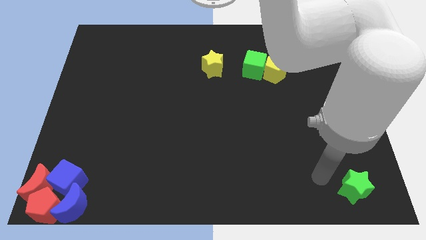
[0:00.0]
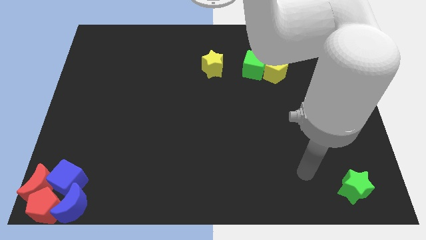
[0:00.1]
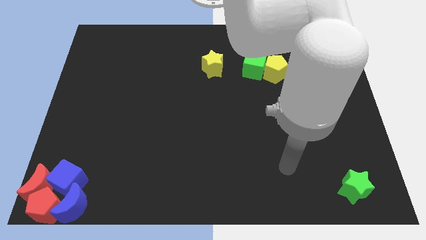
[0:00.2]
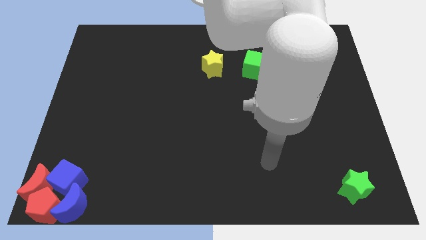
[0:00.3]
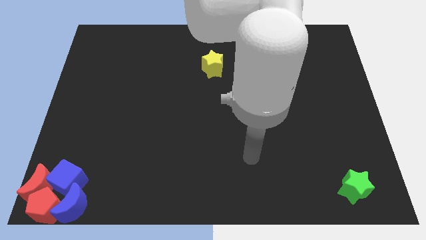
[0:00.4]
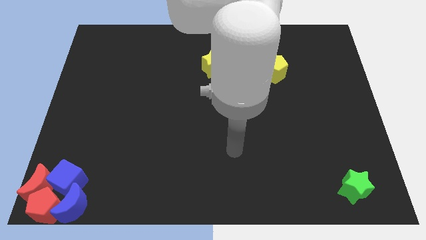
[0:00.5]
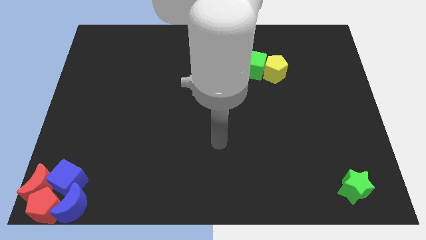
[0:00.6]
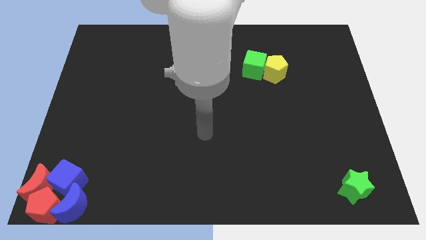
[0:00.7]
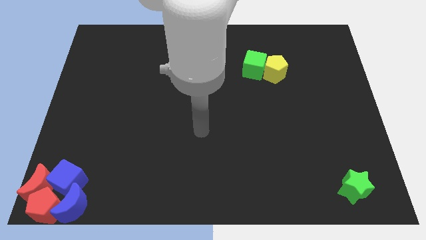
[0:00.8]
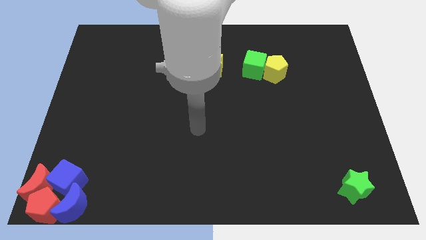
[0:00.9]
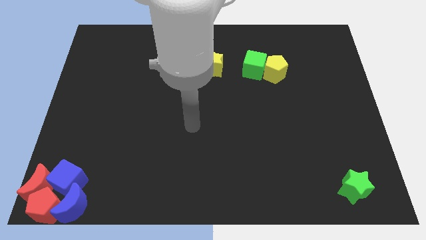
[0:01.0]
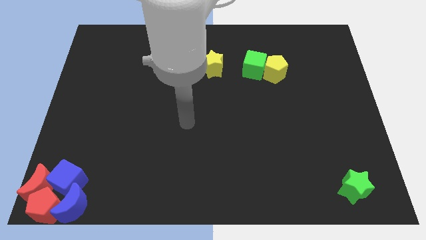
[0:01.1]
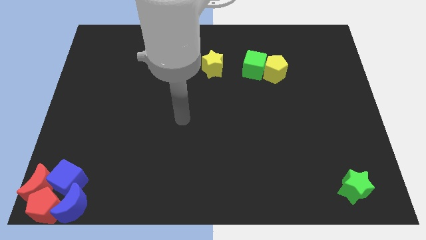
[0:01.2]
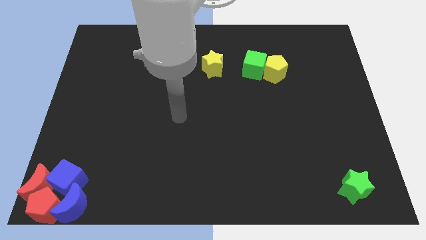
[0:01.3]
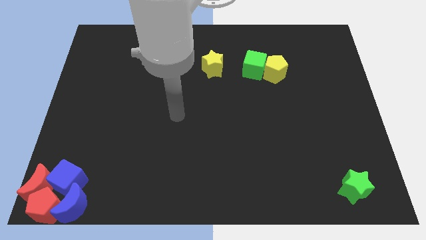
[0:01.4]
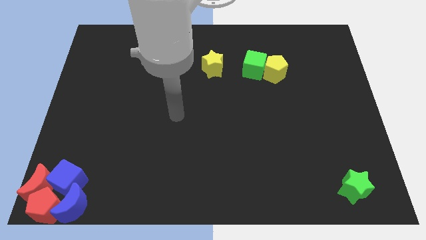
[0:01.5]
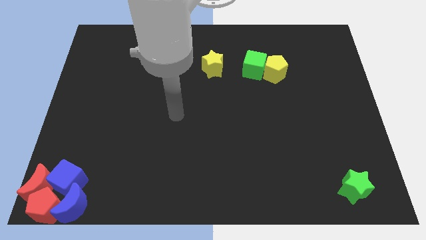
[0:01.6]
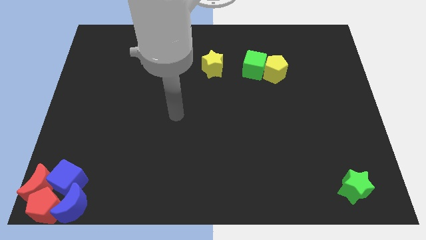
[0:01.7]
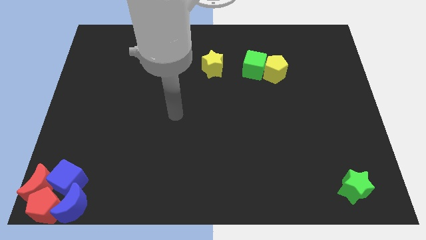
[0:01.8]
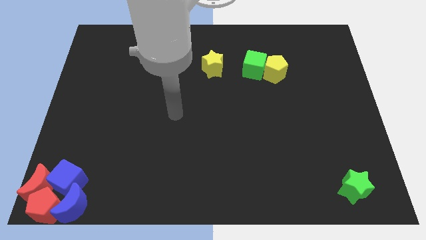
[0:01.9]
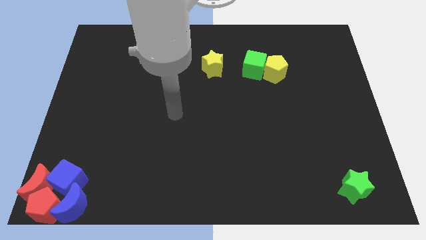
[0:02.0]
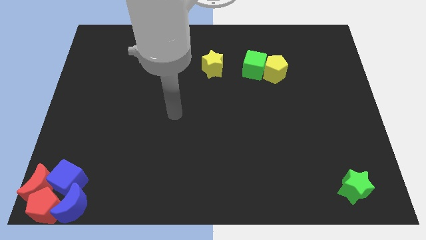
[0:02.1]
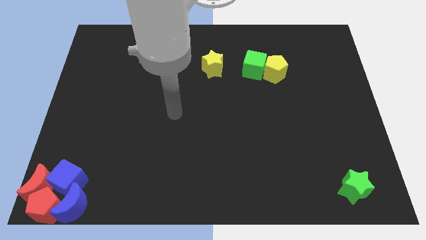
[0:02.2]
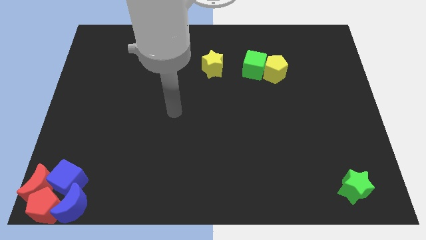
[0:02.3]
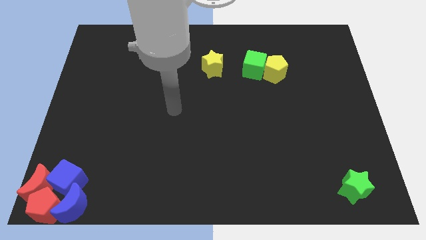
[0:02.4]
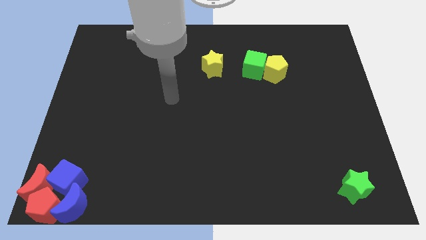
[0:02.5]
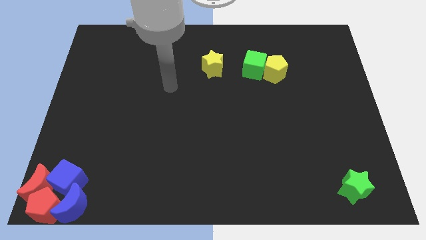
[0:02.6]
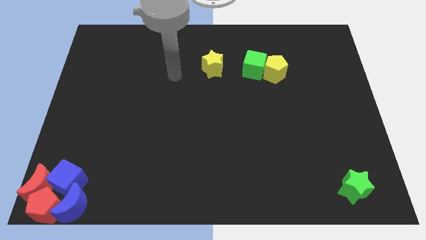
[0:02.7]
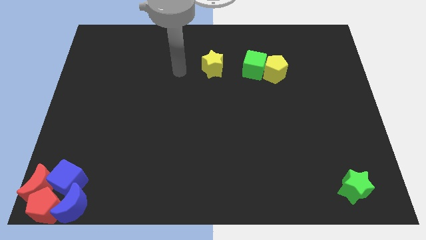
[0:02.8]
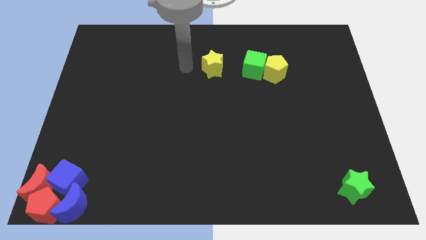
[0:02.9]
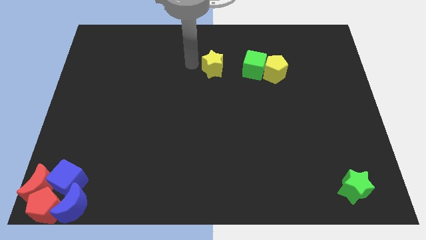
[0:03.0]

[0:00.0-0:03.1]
move your arm and point to the left of green cube

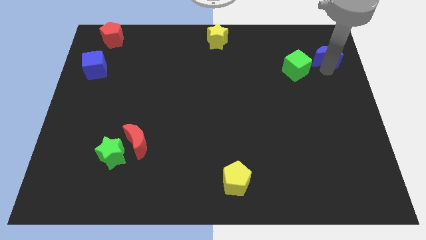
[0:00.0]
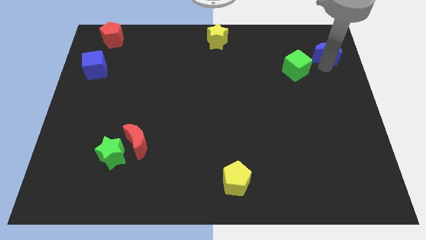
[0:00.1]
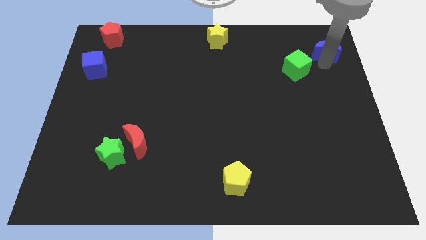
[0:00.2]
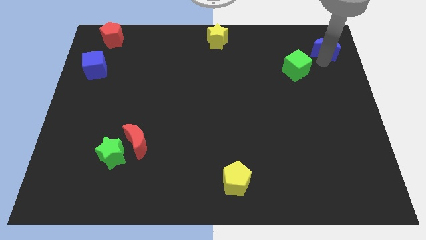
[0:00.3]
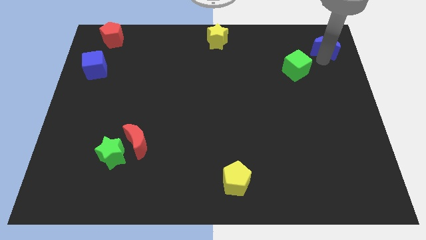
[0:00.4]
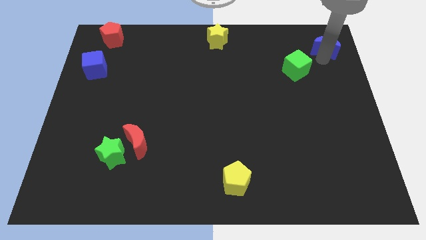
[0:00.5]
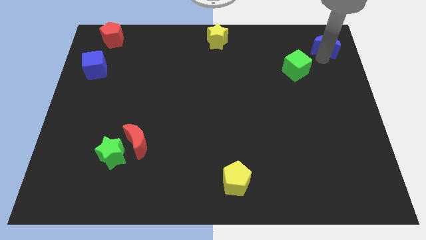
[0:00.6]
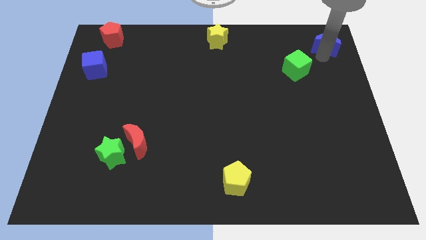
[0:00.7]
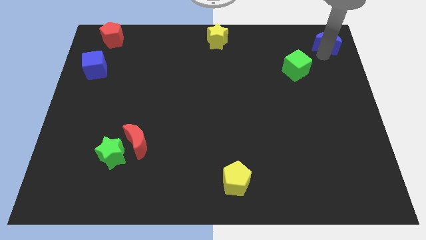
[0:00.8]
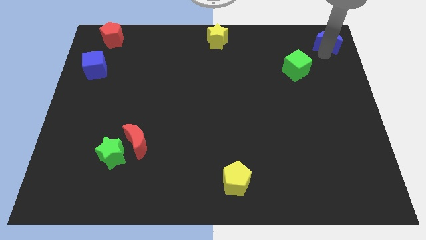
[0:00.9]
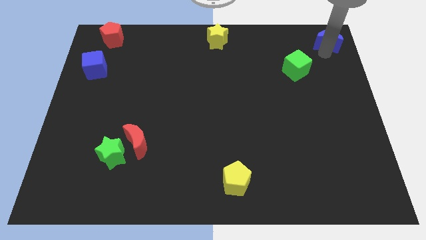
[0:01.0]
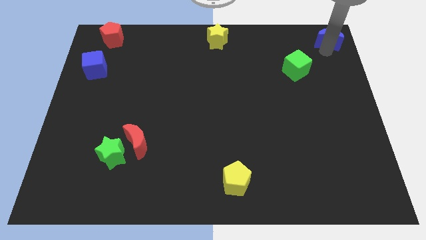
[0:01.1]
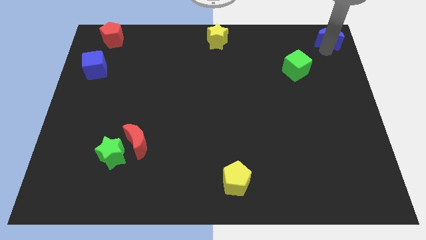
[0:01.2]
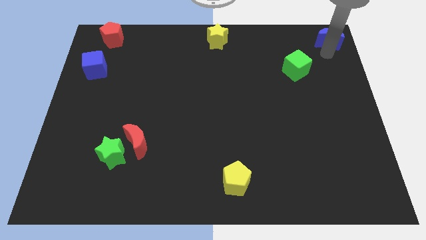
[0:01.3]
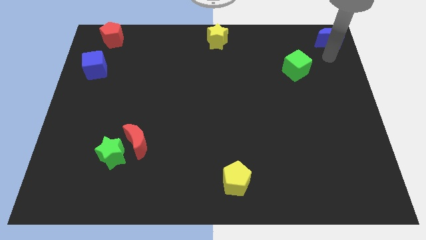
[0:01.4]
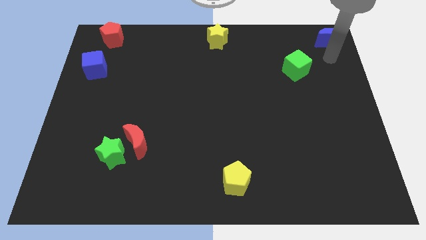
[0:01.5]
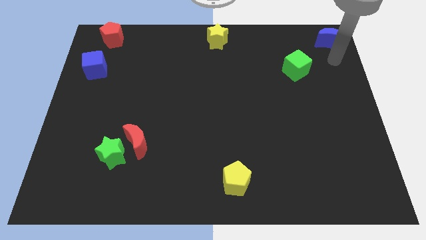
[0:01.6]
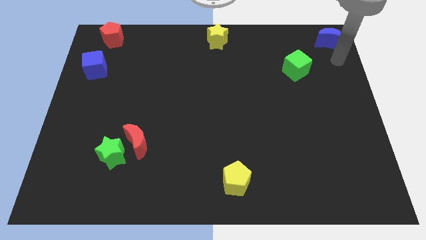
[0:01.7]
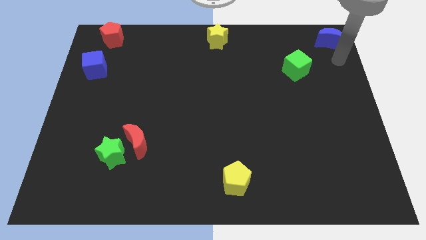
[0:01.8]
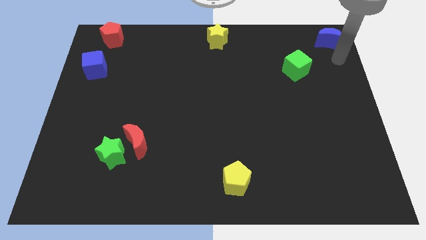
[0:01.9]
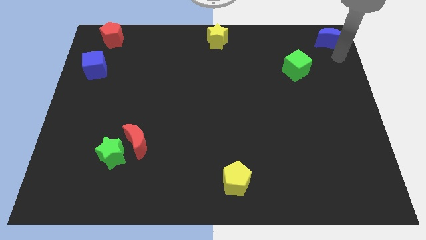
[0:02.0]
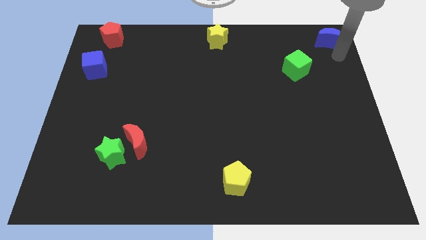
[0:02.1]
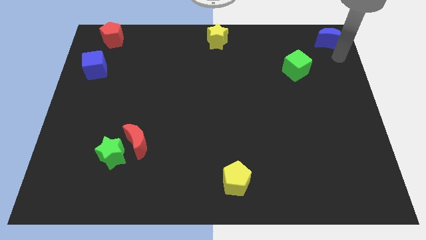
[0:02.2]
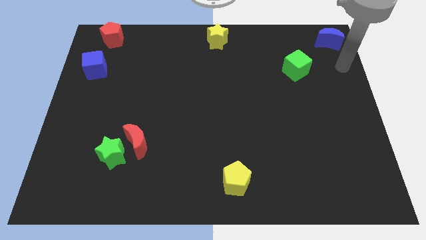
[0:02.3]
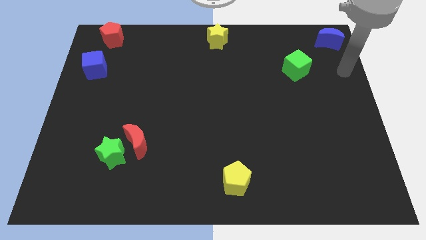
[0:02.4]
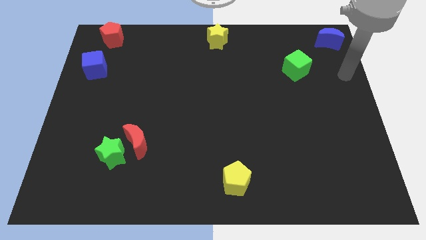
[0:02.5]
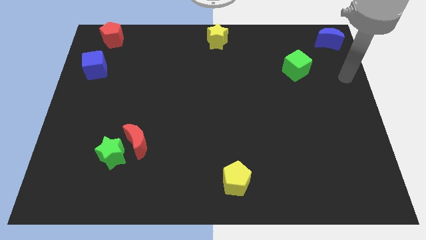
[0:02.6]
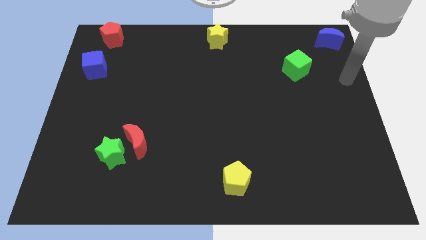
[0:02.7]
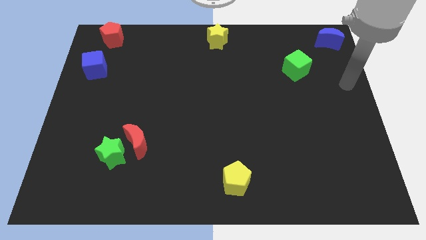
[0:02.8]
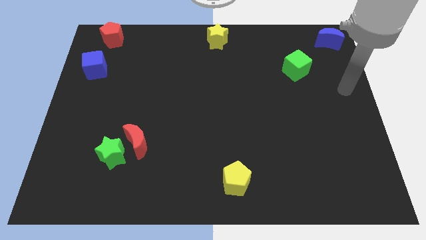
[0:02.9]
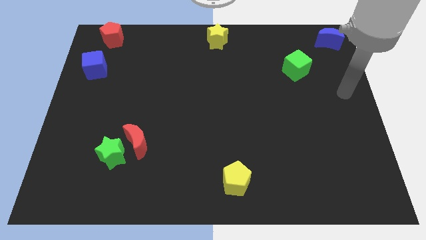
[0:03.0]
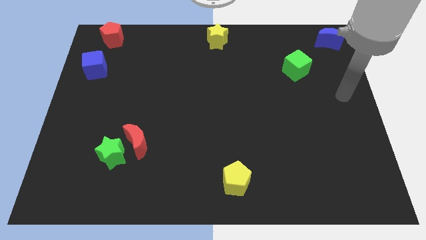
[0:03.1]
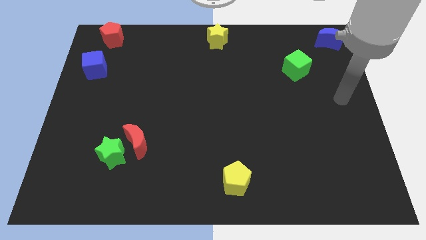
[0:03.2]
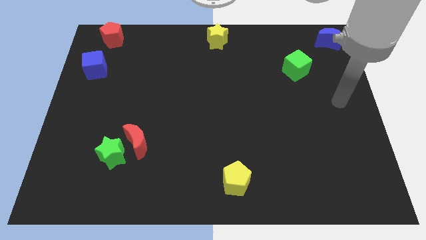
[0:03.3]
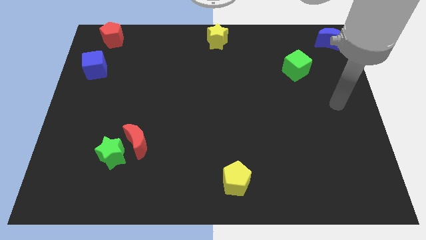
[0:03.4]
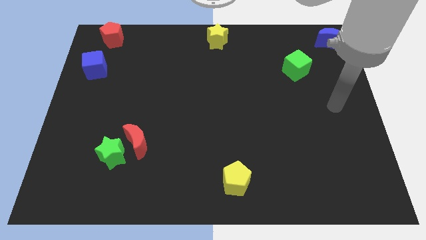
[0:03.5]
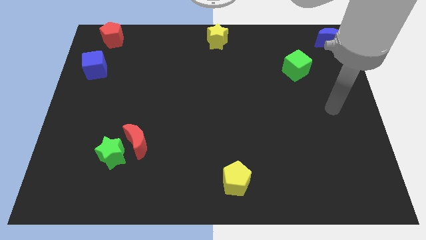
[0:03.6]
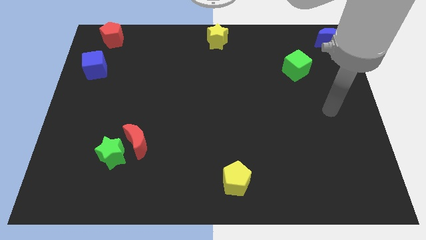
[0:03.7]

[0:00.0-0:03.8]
separate blue cube from green cube

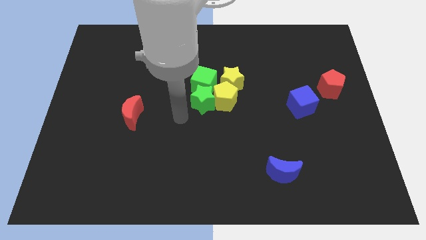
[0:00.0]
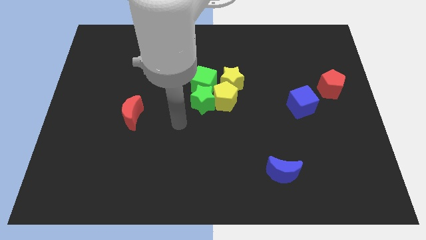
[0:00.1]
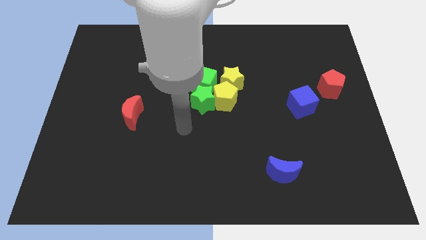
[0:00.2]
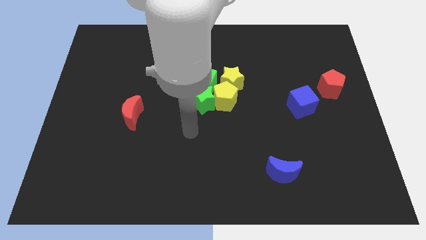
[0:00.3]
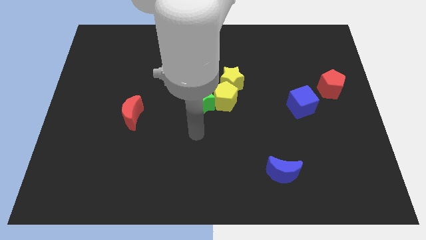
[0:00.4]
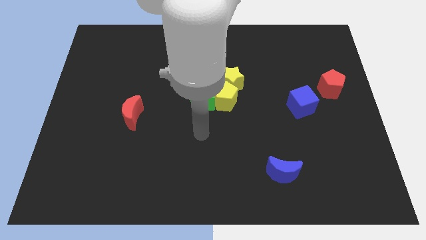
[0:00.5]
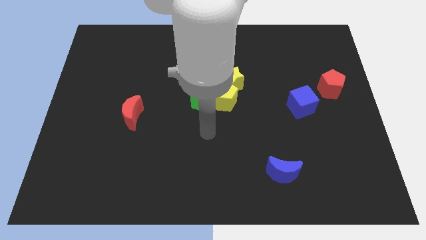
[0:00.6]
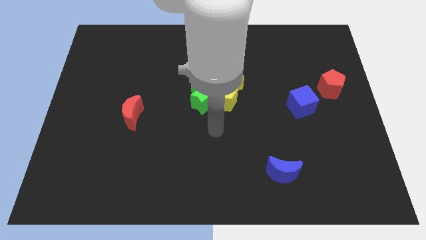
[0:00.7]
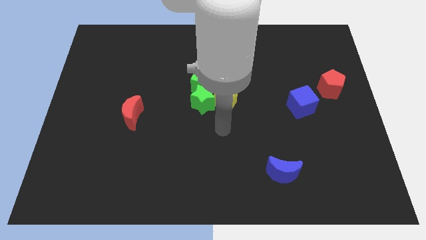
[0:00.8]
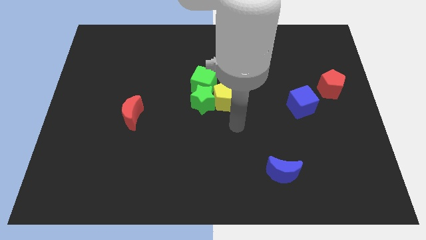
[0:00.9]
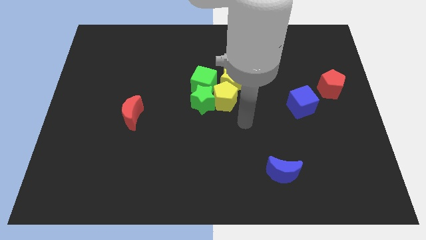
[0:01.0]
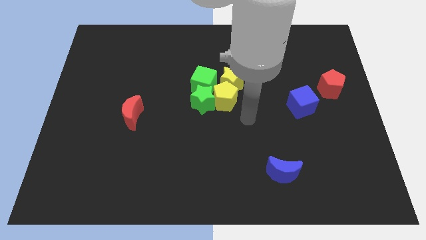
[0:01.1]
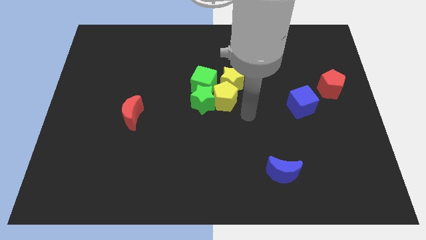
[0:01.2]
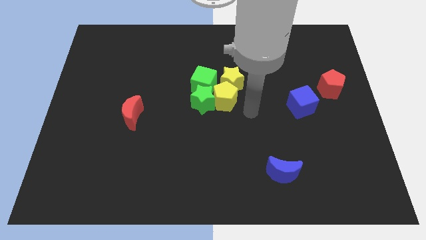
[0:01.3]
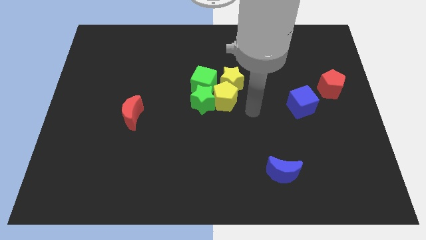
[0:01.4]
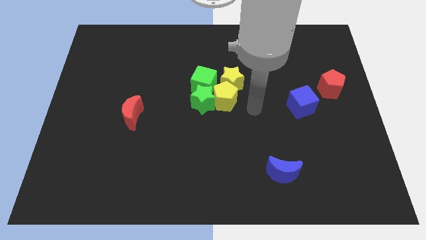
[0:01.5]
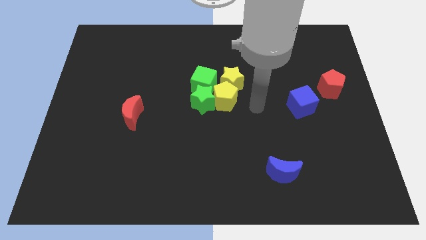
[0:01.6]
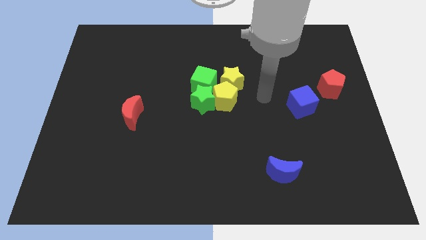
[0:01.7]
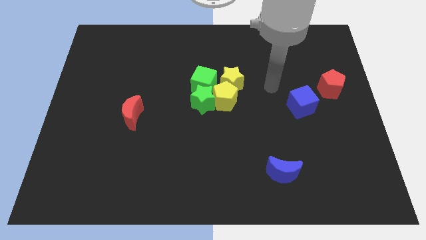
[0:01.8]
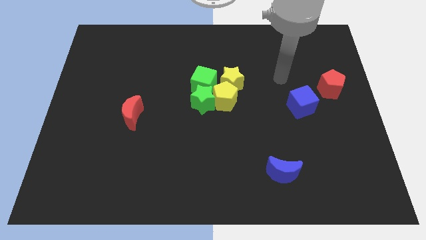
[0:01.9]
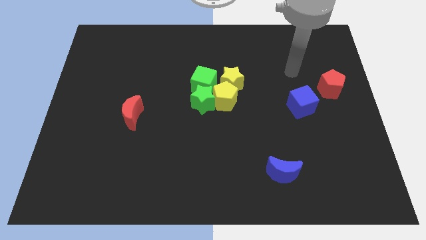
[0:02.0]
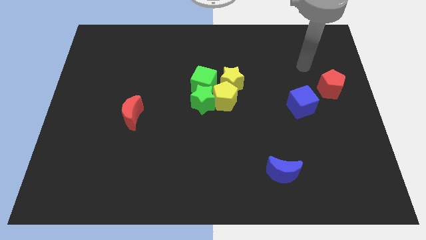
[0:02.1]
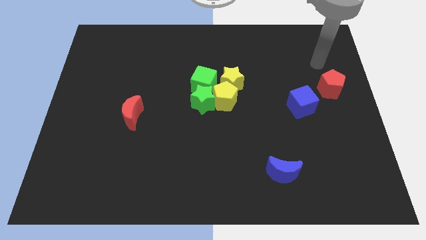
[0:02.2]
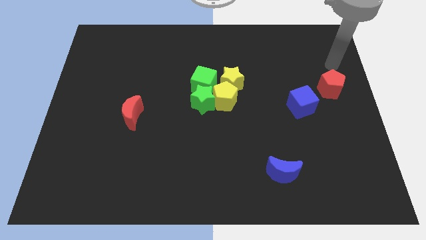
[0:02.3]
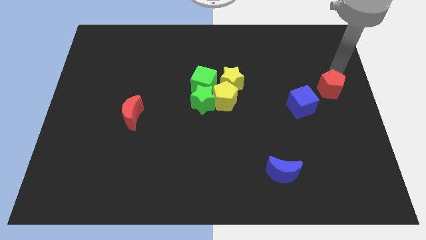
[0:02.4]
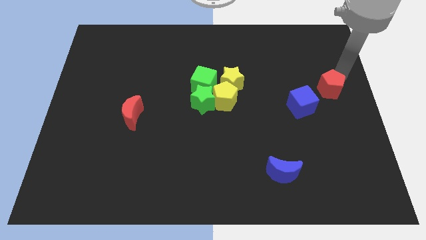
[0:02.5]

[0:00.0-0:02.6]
point your arm on top of red pentagon
